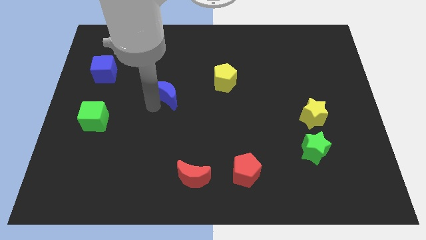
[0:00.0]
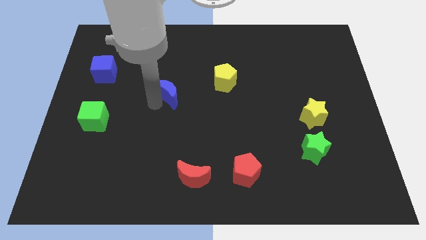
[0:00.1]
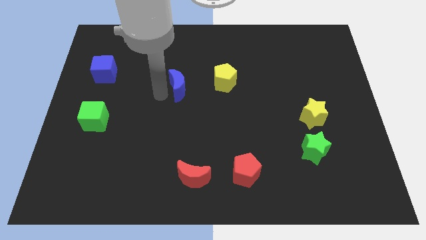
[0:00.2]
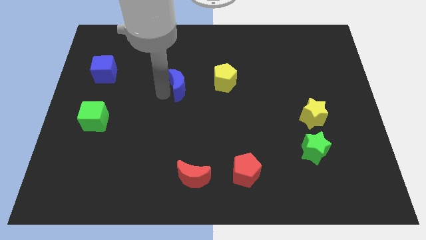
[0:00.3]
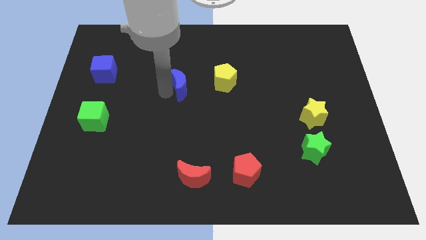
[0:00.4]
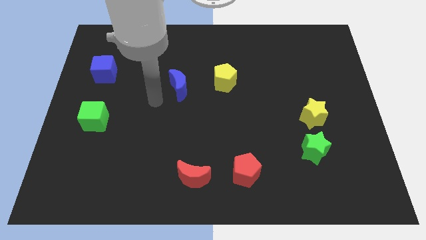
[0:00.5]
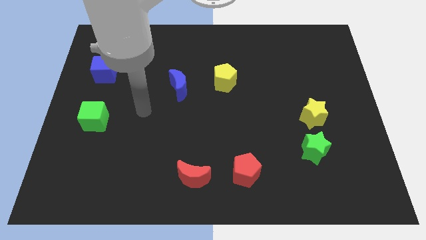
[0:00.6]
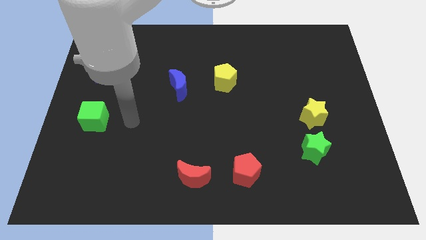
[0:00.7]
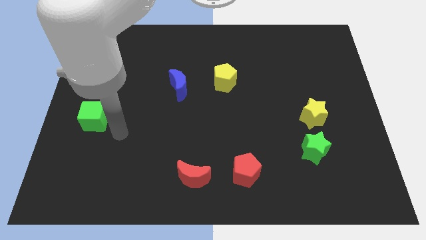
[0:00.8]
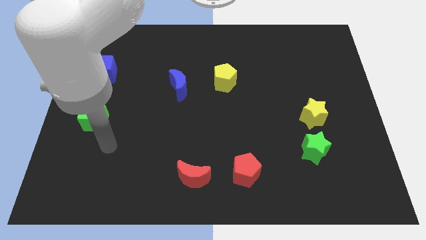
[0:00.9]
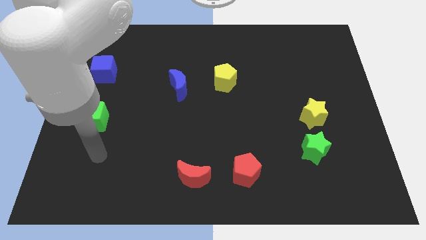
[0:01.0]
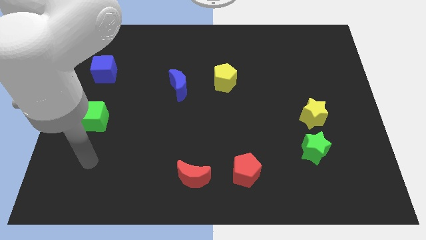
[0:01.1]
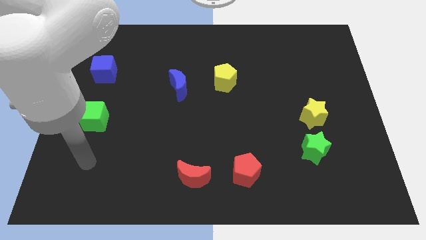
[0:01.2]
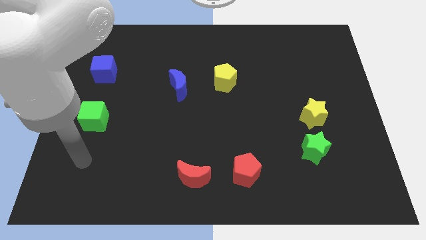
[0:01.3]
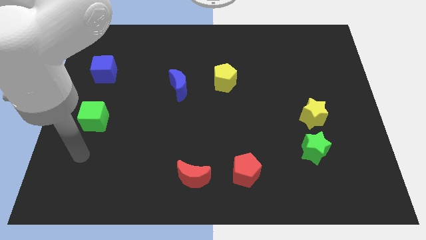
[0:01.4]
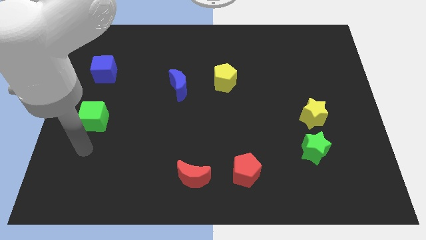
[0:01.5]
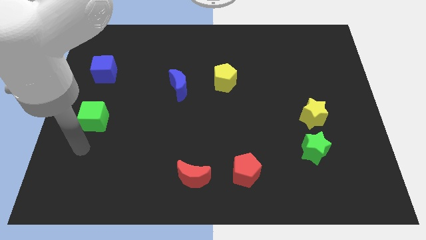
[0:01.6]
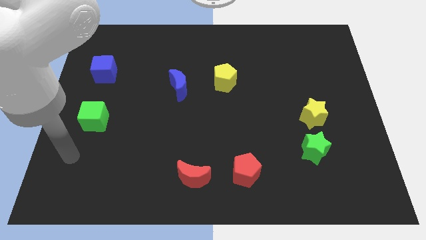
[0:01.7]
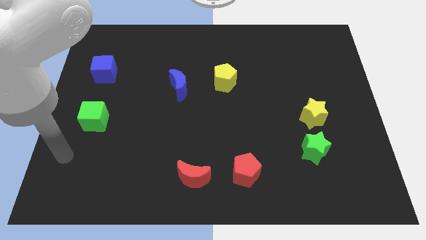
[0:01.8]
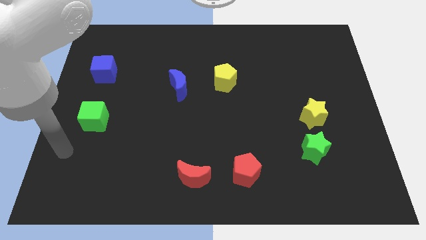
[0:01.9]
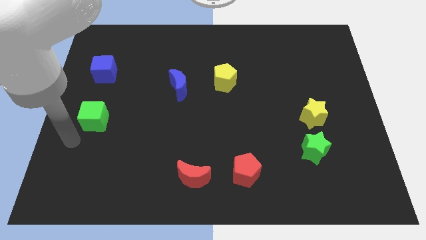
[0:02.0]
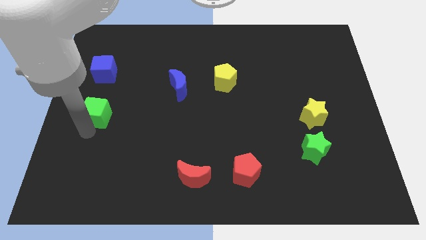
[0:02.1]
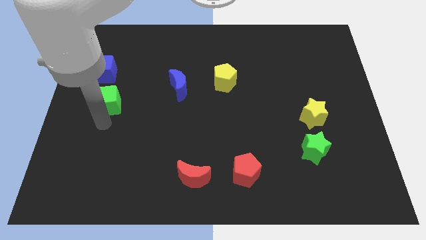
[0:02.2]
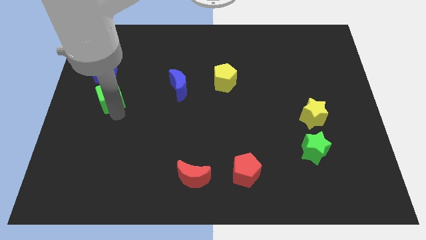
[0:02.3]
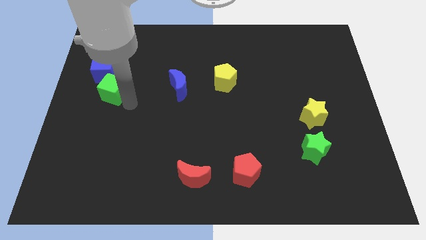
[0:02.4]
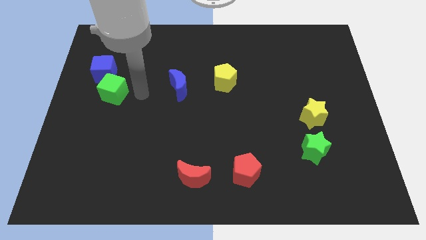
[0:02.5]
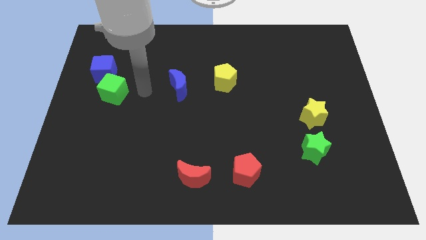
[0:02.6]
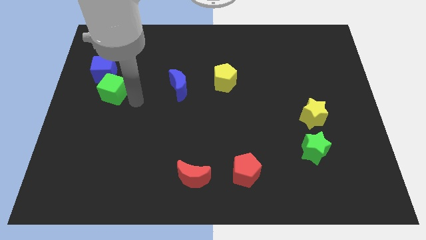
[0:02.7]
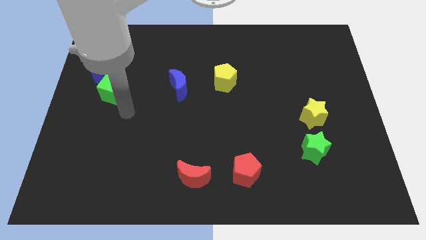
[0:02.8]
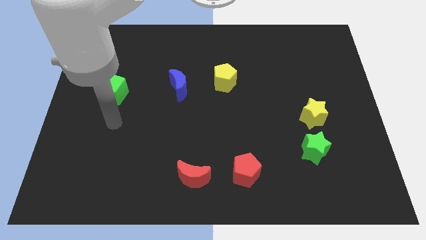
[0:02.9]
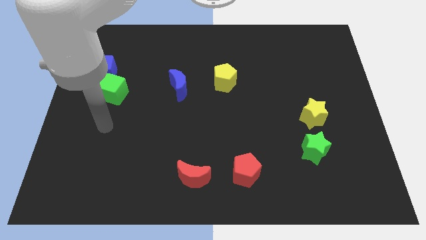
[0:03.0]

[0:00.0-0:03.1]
move green cube close to the blue cube

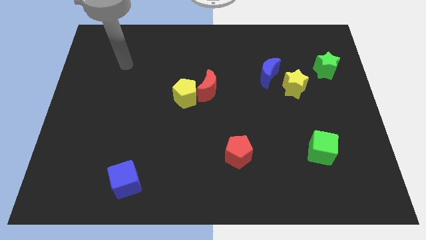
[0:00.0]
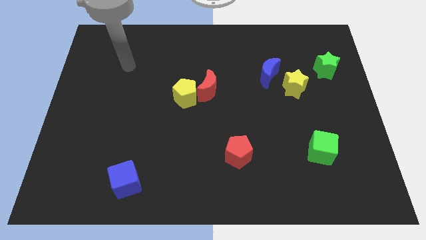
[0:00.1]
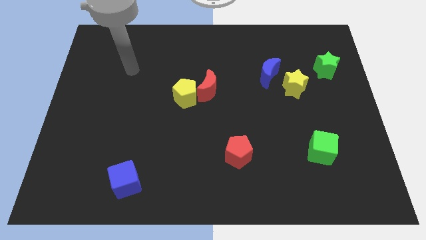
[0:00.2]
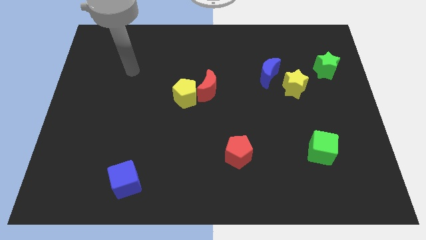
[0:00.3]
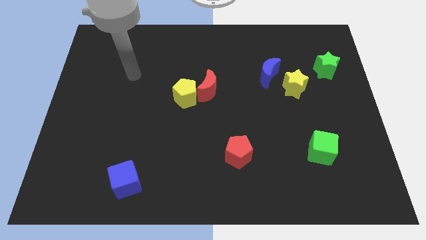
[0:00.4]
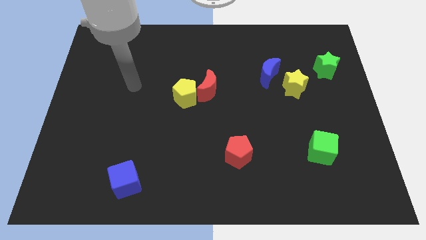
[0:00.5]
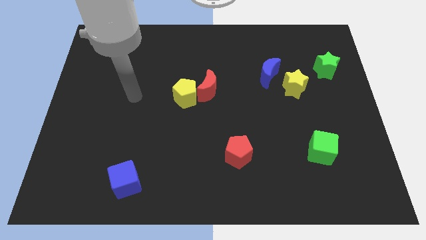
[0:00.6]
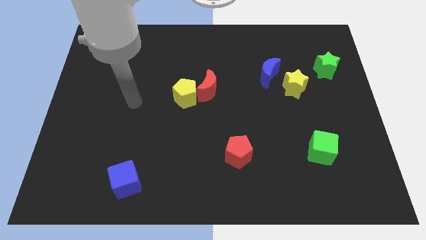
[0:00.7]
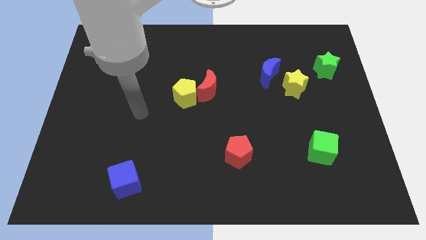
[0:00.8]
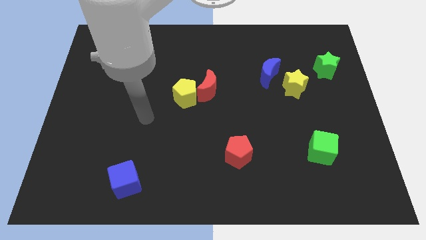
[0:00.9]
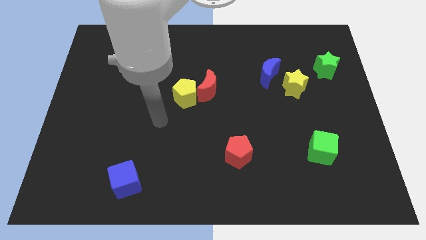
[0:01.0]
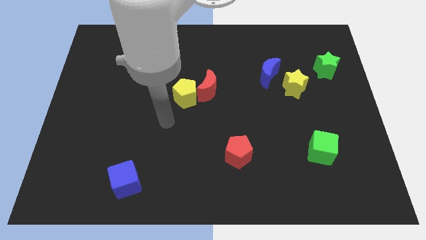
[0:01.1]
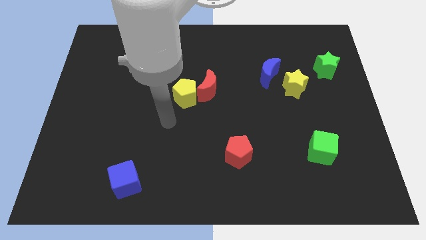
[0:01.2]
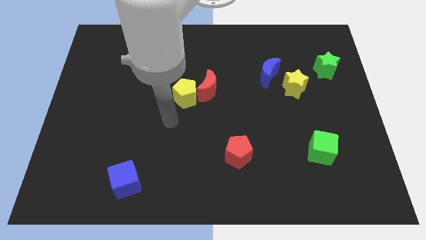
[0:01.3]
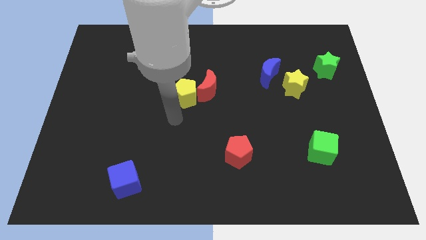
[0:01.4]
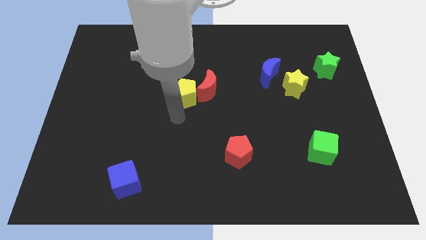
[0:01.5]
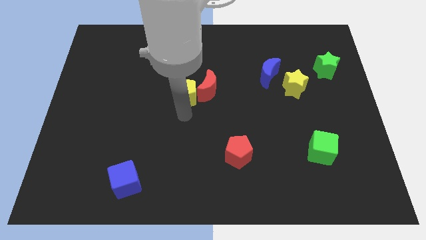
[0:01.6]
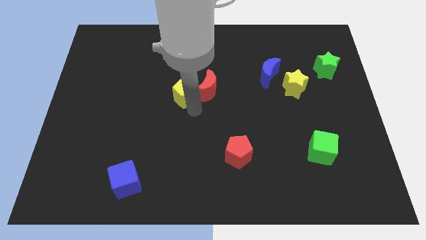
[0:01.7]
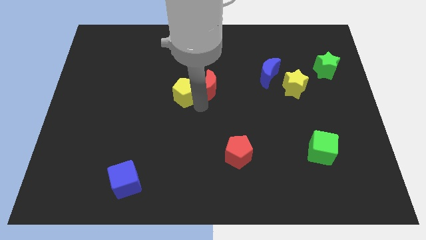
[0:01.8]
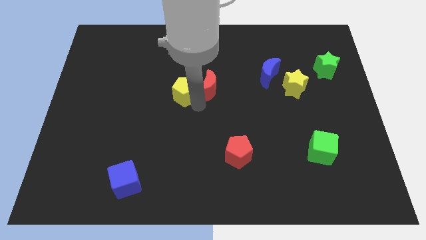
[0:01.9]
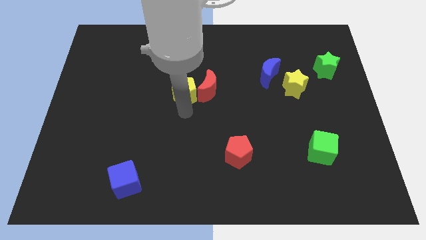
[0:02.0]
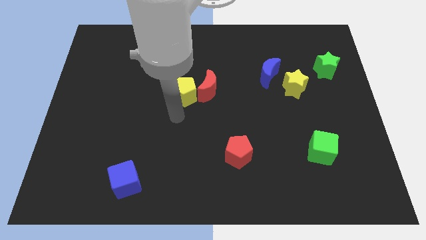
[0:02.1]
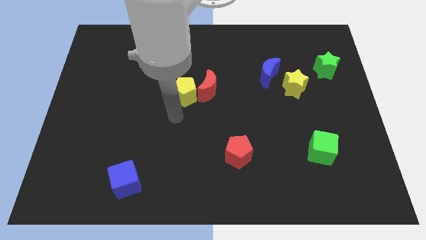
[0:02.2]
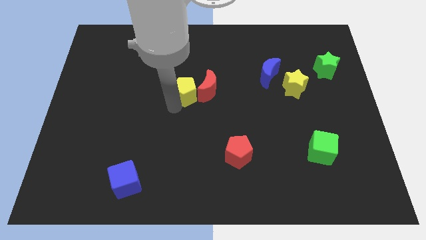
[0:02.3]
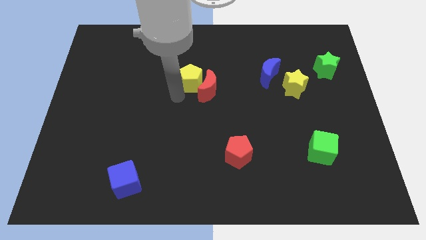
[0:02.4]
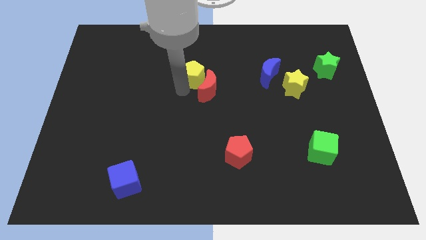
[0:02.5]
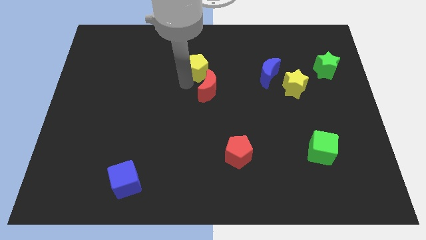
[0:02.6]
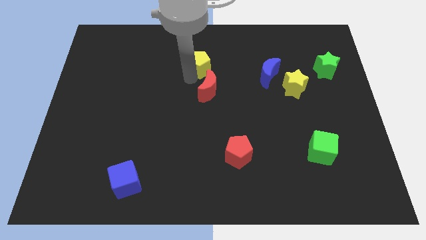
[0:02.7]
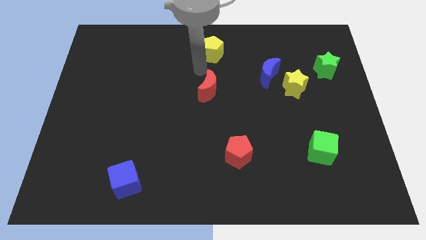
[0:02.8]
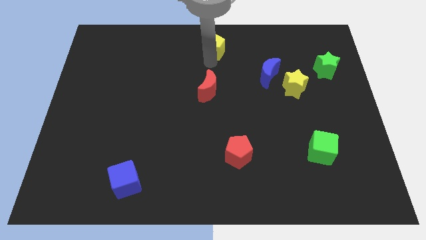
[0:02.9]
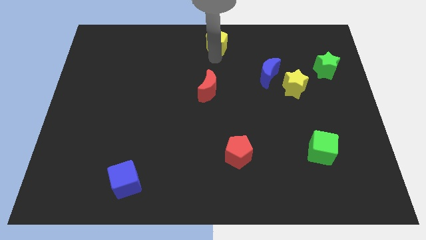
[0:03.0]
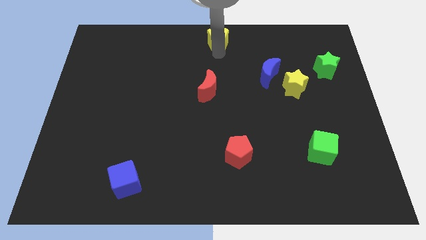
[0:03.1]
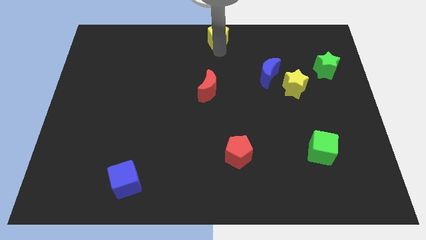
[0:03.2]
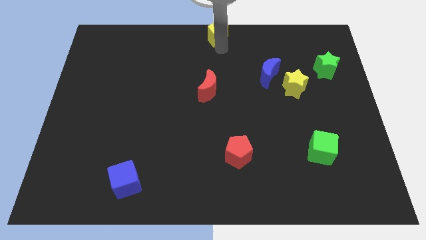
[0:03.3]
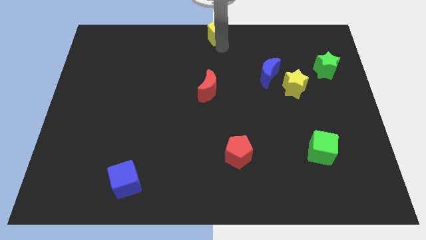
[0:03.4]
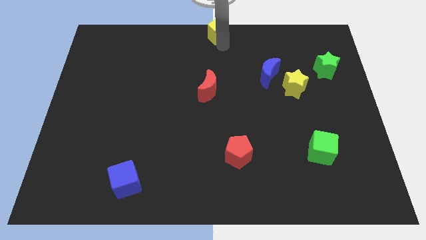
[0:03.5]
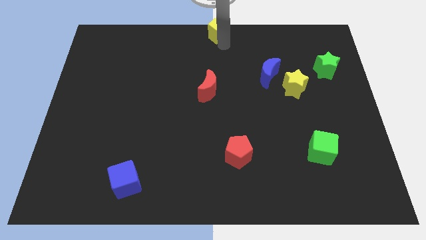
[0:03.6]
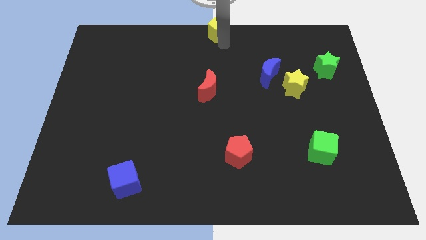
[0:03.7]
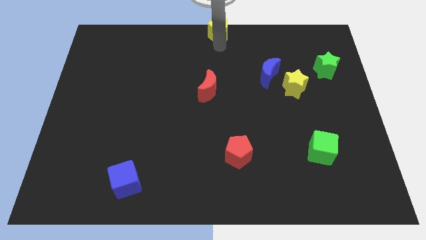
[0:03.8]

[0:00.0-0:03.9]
slide the yellow pentagon to the top center of the table

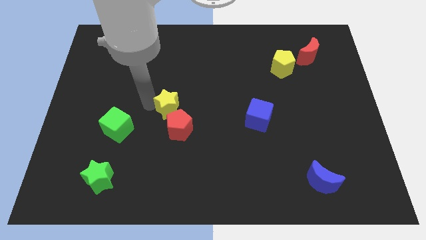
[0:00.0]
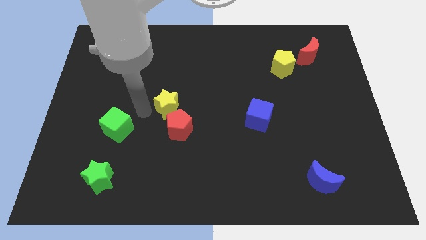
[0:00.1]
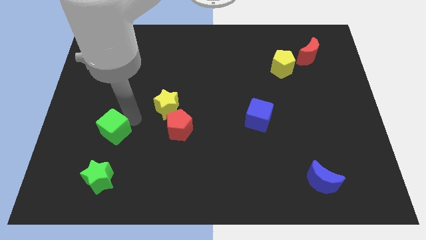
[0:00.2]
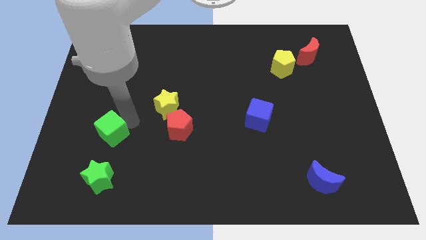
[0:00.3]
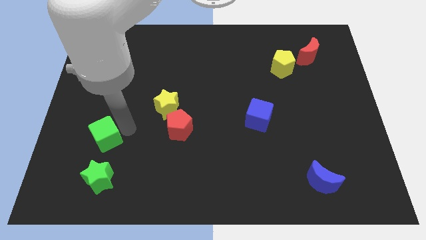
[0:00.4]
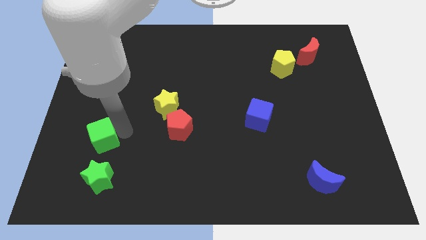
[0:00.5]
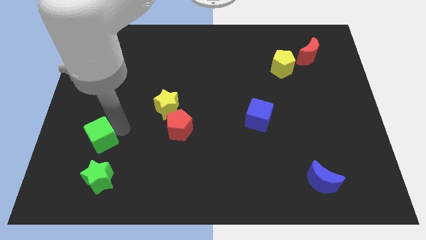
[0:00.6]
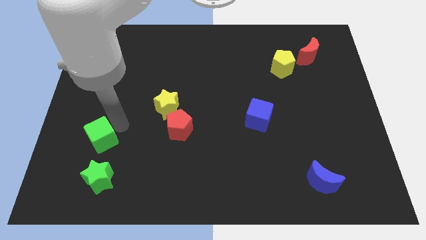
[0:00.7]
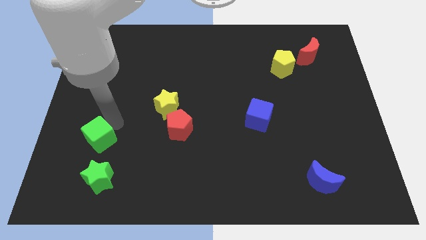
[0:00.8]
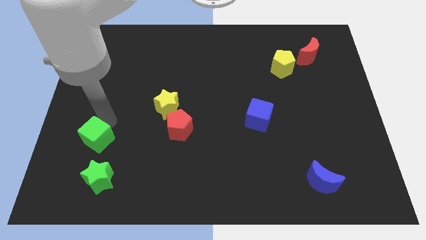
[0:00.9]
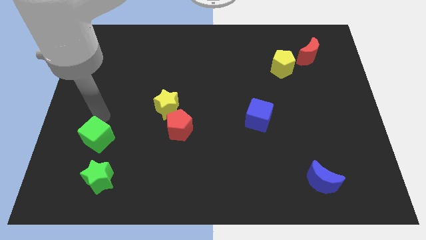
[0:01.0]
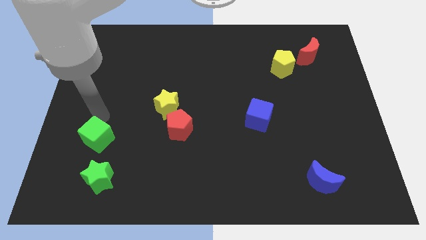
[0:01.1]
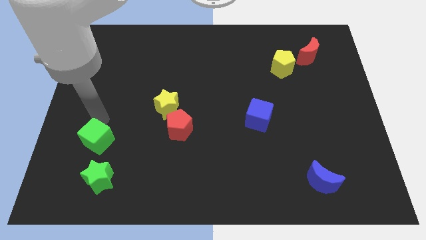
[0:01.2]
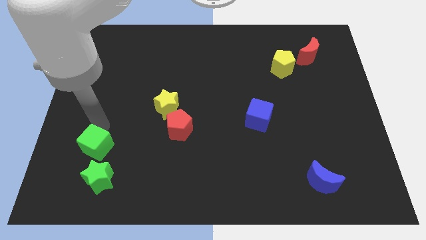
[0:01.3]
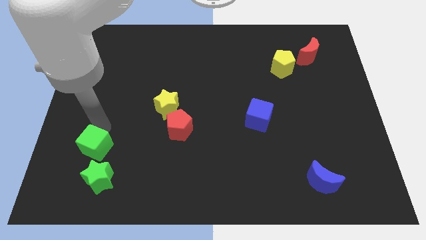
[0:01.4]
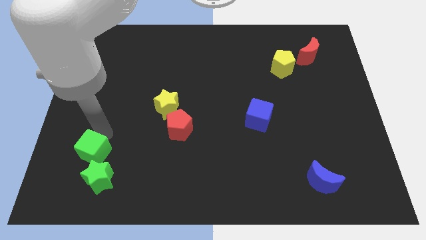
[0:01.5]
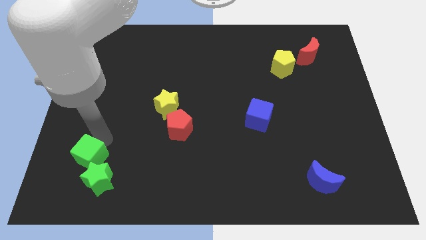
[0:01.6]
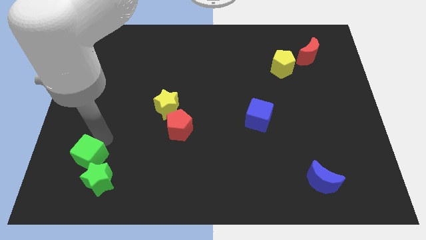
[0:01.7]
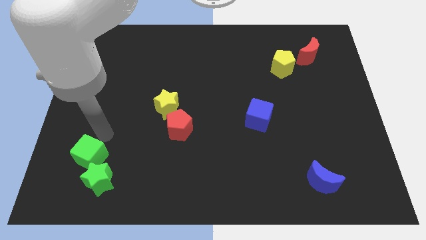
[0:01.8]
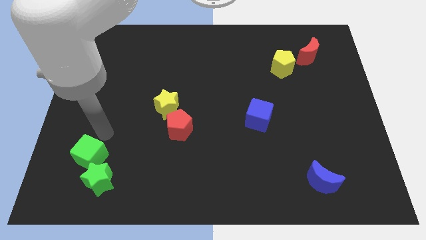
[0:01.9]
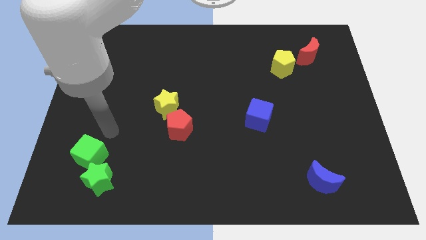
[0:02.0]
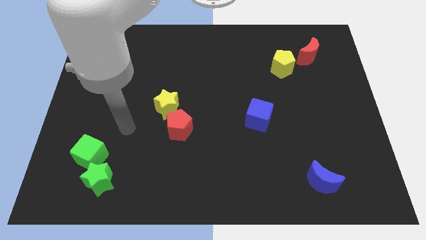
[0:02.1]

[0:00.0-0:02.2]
slide the green cube into the green star
